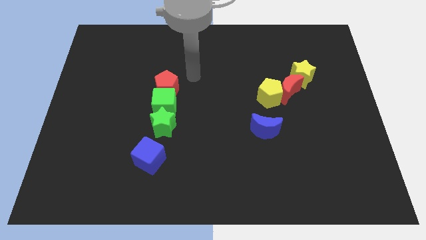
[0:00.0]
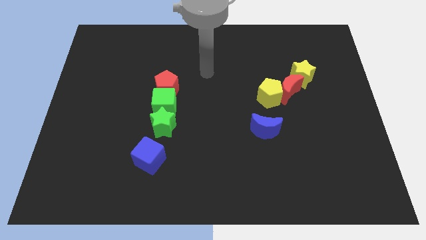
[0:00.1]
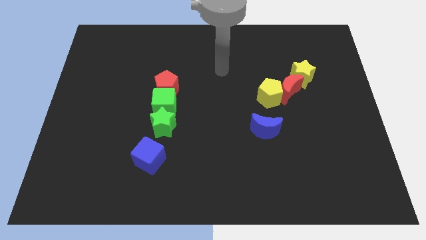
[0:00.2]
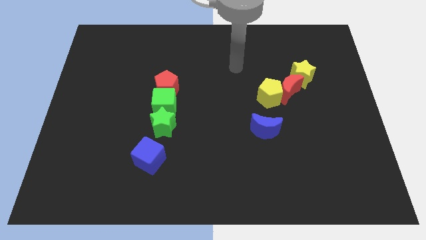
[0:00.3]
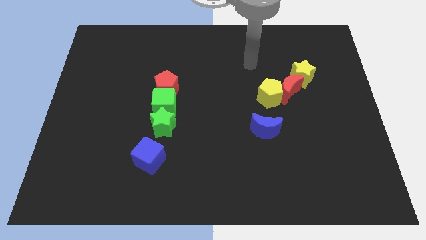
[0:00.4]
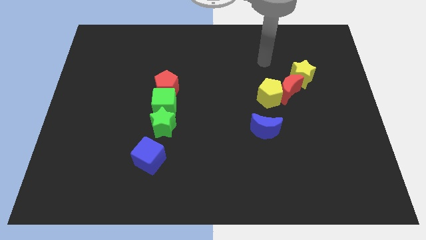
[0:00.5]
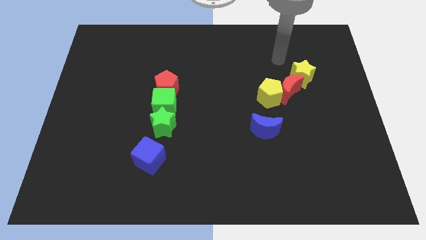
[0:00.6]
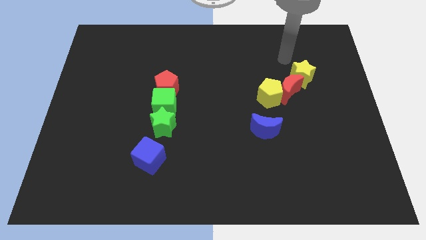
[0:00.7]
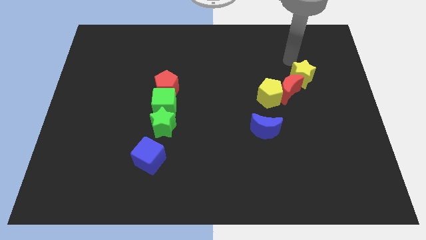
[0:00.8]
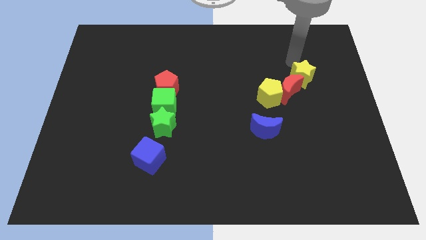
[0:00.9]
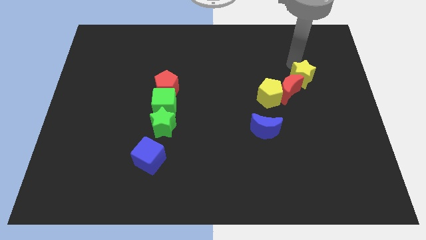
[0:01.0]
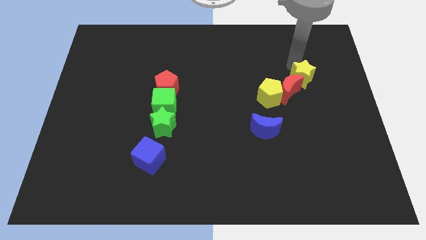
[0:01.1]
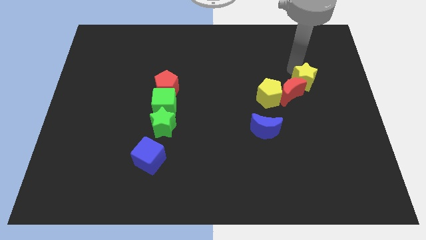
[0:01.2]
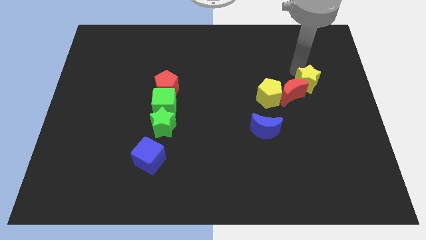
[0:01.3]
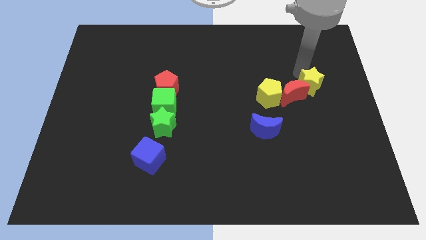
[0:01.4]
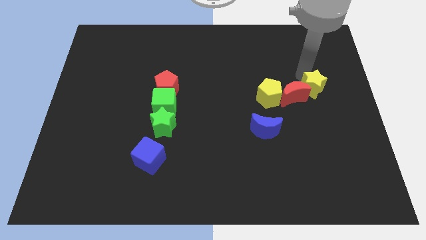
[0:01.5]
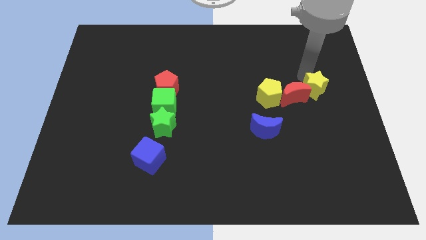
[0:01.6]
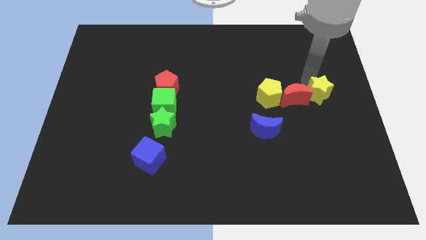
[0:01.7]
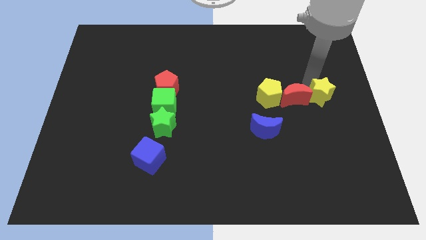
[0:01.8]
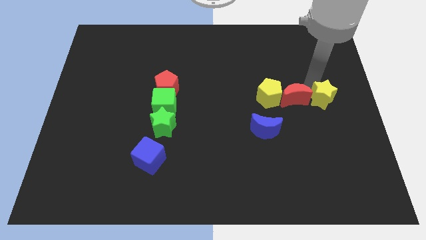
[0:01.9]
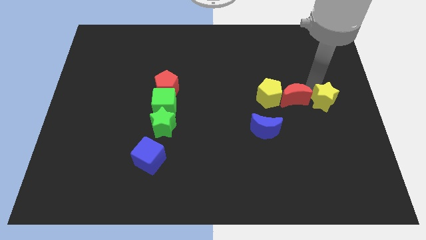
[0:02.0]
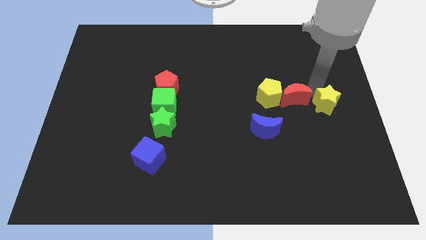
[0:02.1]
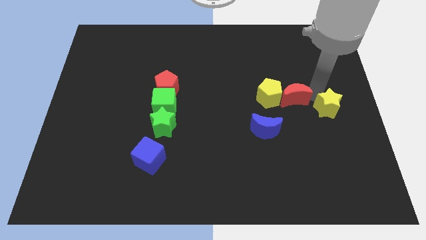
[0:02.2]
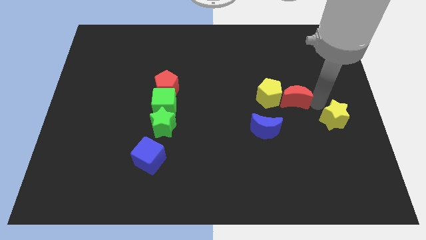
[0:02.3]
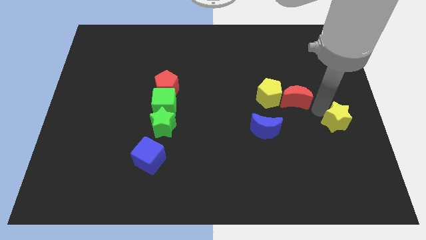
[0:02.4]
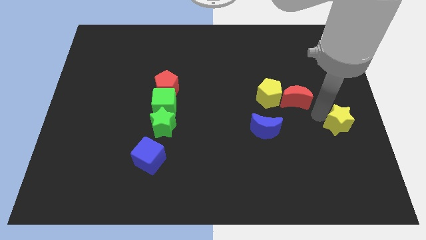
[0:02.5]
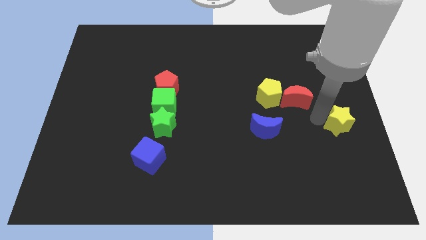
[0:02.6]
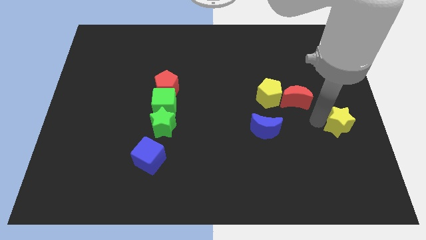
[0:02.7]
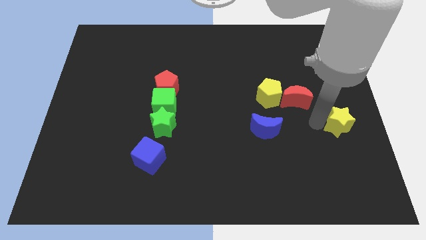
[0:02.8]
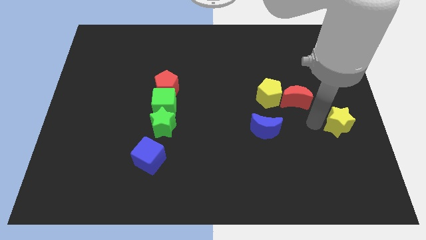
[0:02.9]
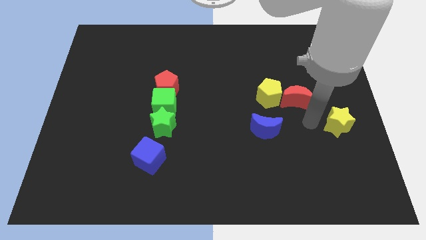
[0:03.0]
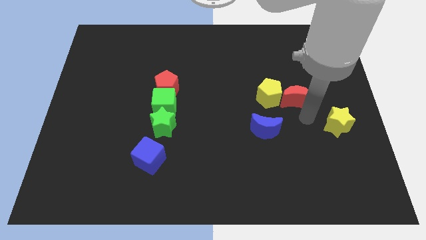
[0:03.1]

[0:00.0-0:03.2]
push the yellow star to the bottom of the board

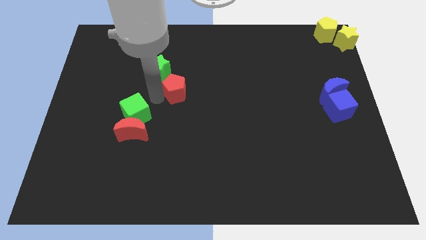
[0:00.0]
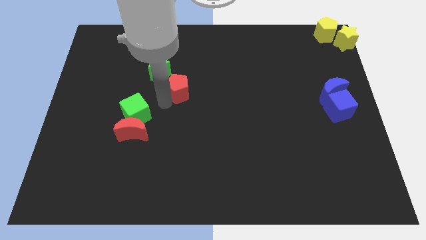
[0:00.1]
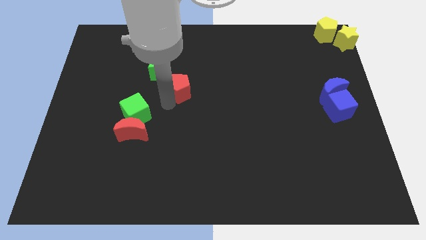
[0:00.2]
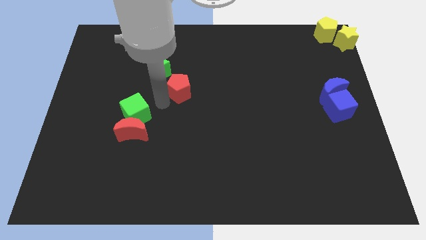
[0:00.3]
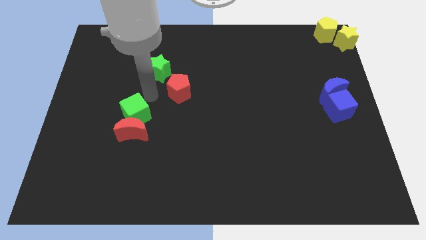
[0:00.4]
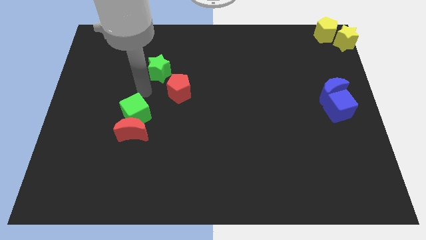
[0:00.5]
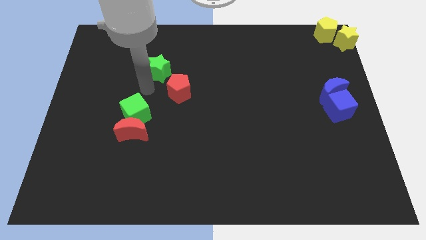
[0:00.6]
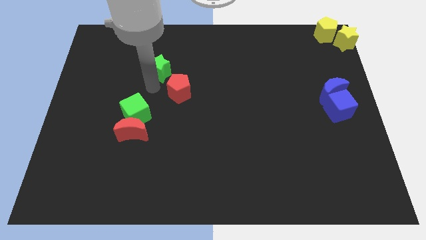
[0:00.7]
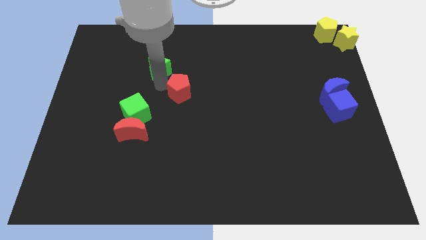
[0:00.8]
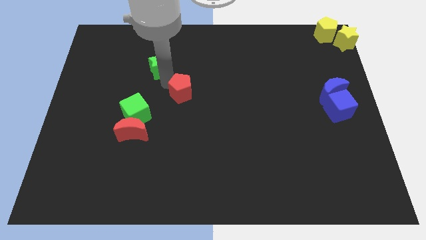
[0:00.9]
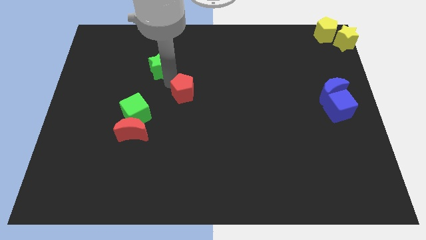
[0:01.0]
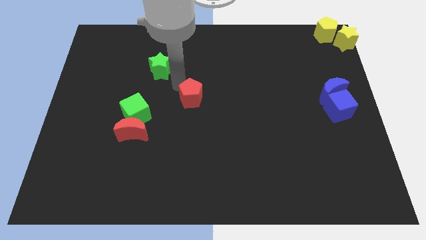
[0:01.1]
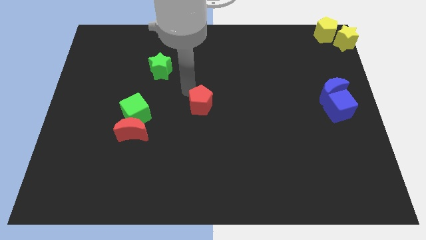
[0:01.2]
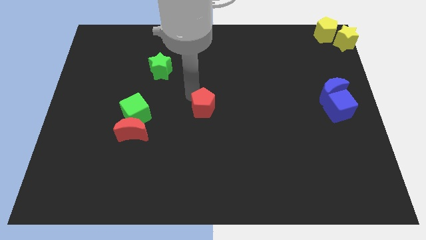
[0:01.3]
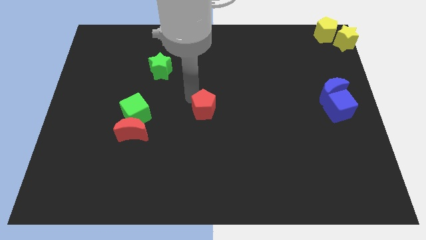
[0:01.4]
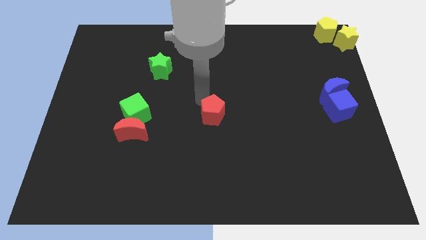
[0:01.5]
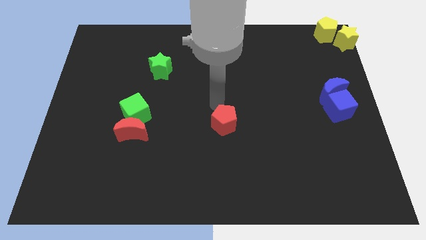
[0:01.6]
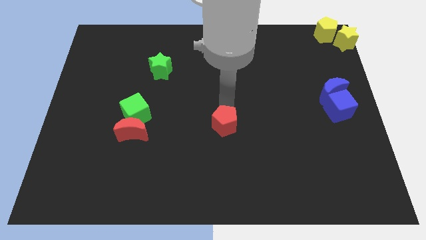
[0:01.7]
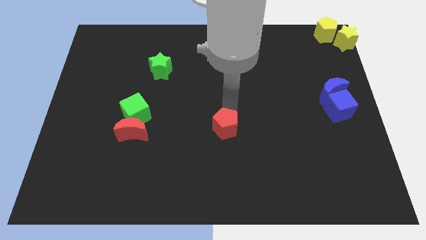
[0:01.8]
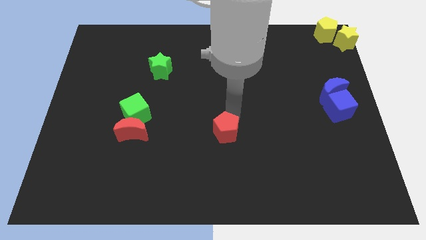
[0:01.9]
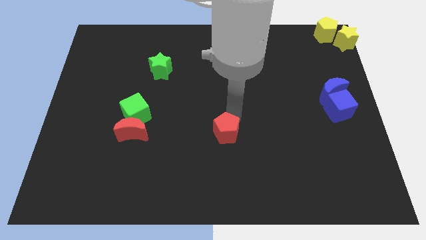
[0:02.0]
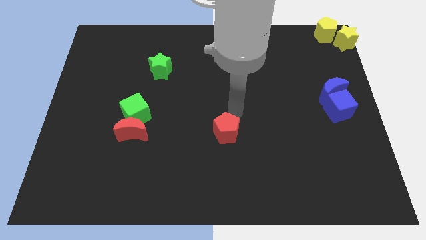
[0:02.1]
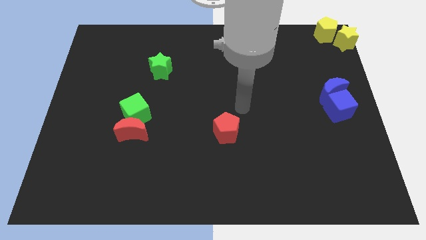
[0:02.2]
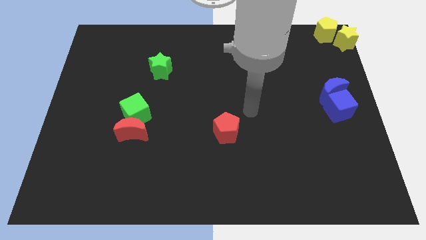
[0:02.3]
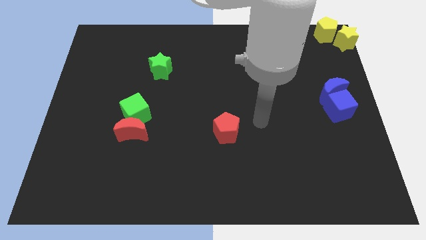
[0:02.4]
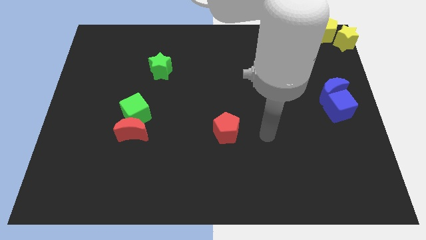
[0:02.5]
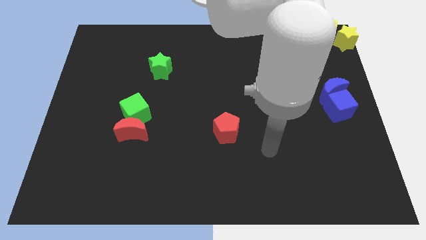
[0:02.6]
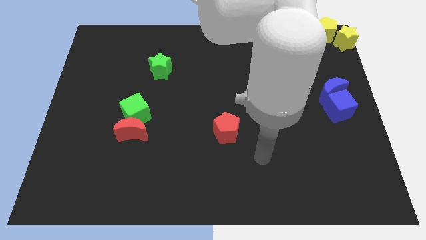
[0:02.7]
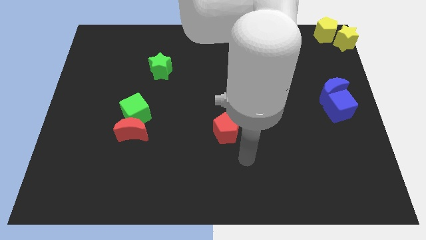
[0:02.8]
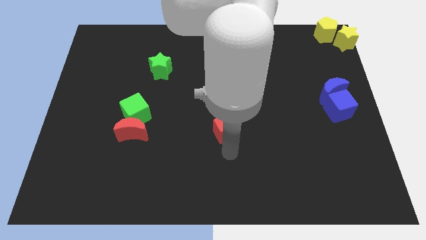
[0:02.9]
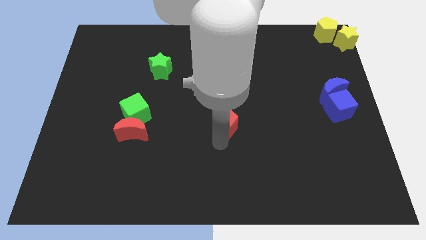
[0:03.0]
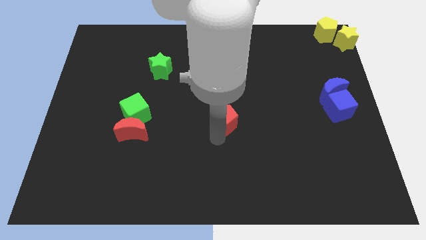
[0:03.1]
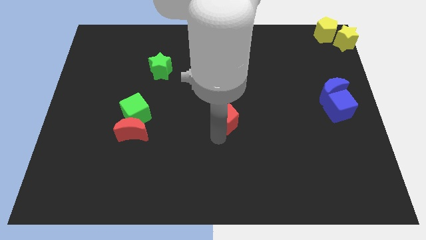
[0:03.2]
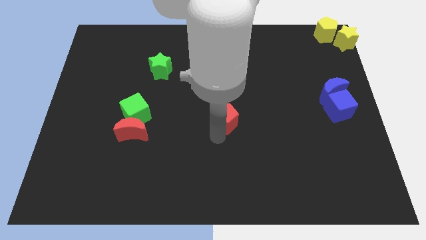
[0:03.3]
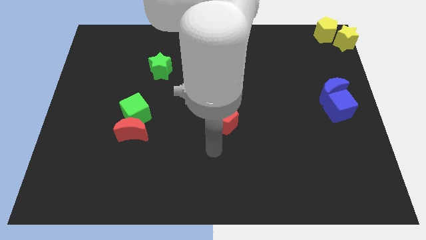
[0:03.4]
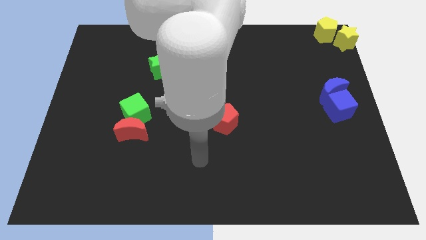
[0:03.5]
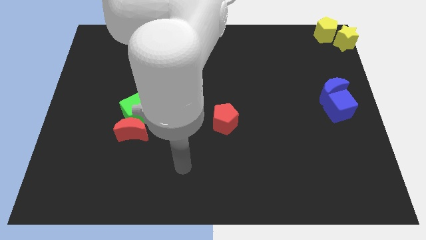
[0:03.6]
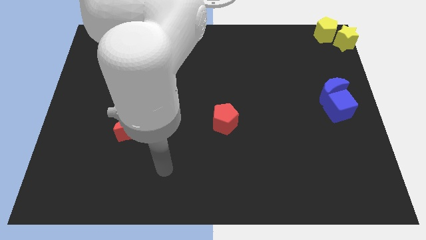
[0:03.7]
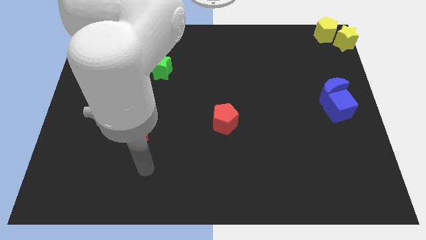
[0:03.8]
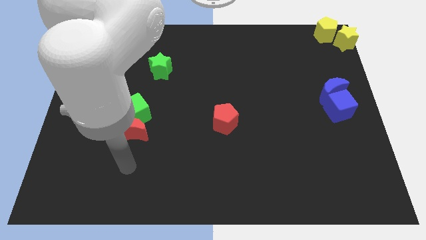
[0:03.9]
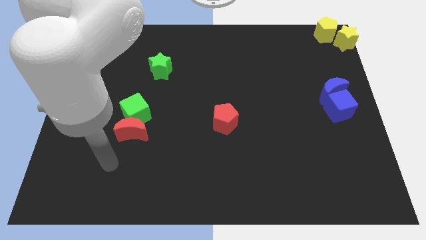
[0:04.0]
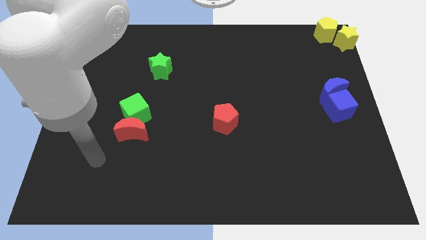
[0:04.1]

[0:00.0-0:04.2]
push the red pentagon towards the center of the board

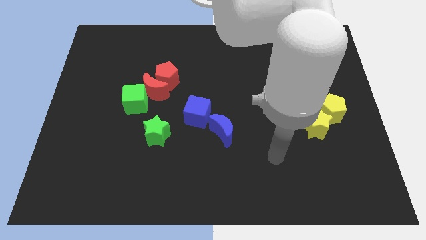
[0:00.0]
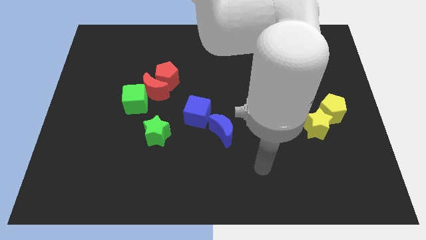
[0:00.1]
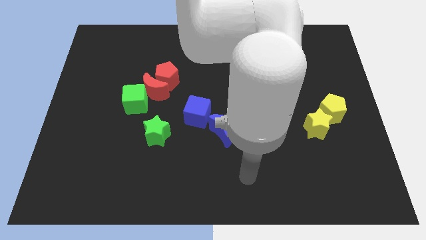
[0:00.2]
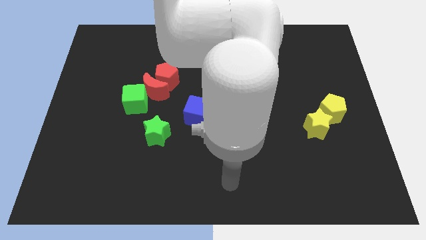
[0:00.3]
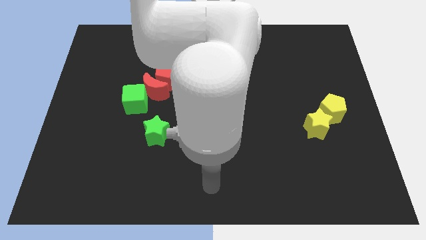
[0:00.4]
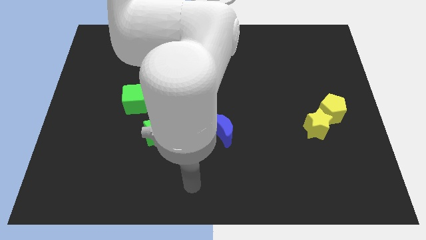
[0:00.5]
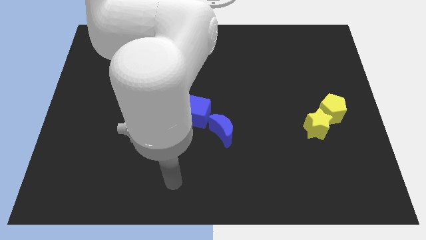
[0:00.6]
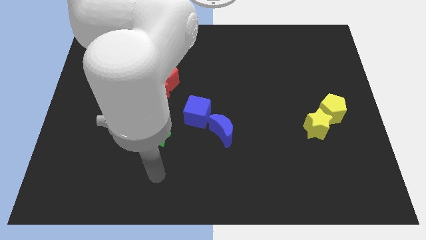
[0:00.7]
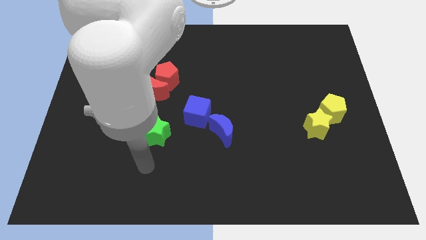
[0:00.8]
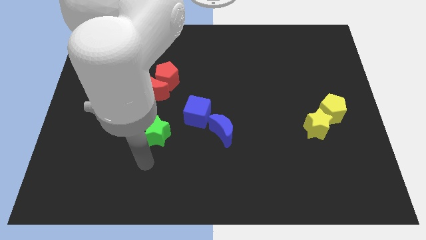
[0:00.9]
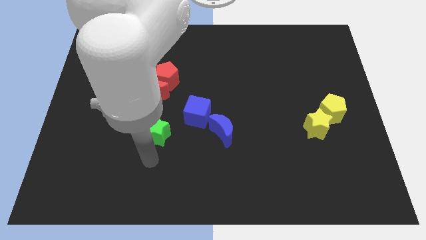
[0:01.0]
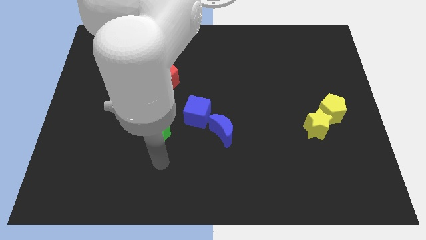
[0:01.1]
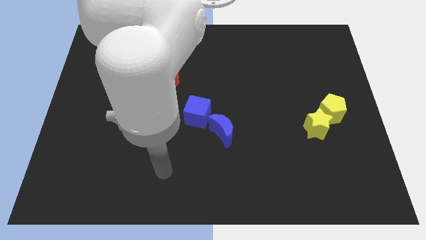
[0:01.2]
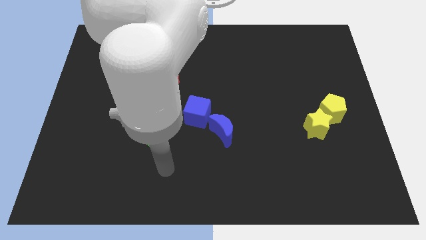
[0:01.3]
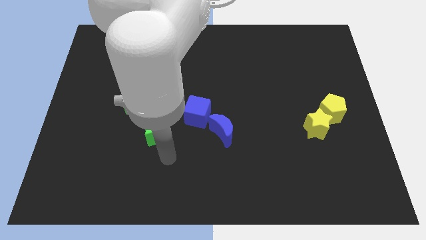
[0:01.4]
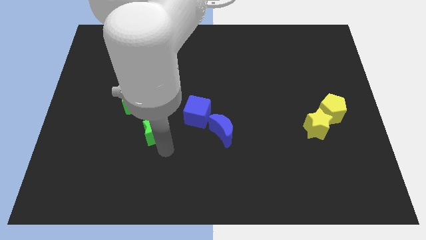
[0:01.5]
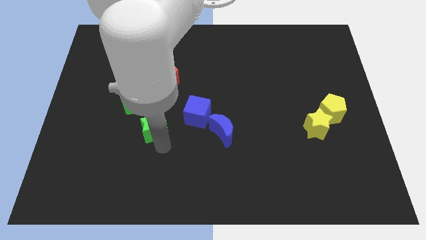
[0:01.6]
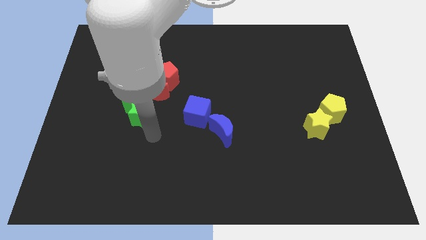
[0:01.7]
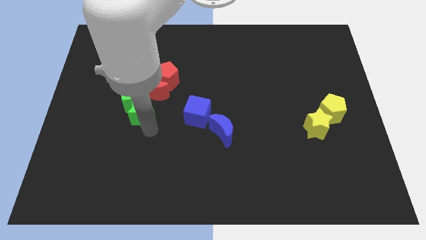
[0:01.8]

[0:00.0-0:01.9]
go near green star
